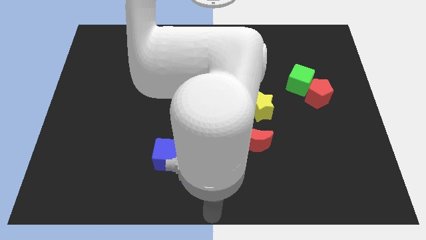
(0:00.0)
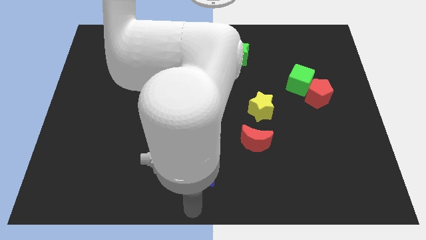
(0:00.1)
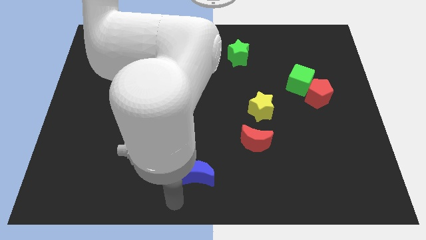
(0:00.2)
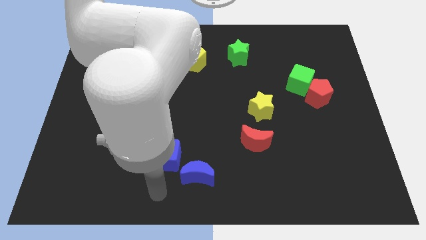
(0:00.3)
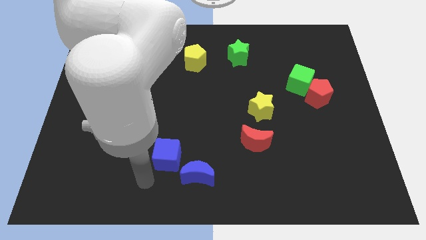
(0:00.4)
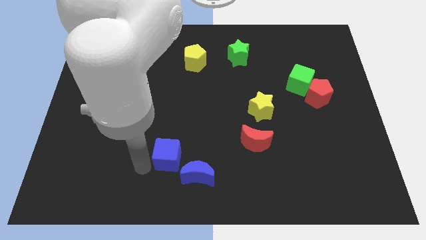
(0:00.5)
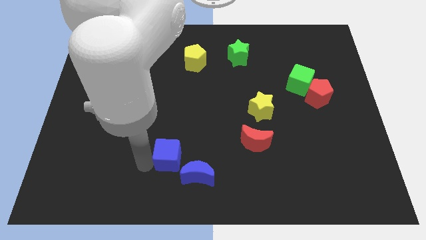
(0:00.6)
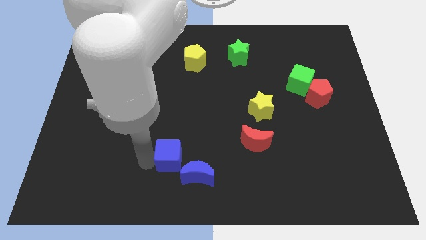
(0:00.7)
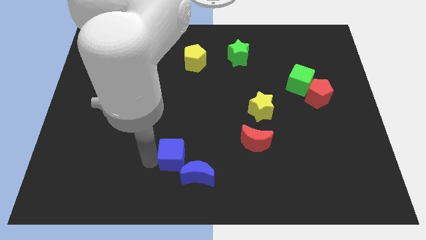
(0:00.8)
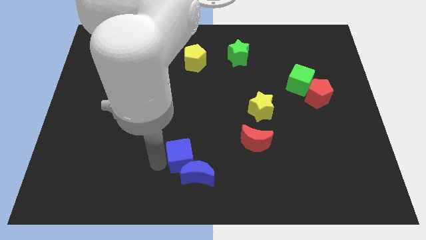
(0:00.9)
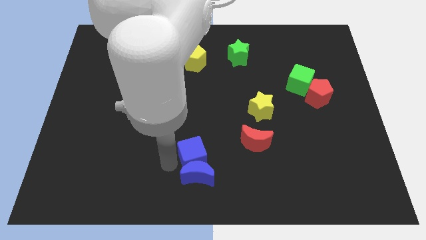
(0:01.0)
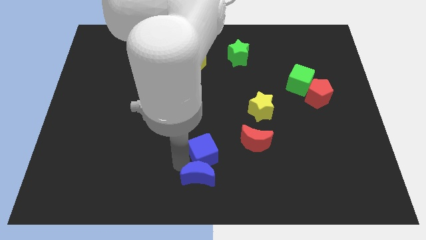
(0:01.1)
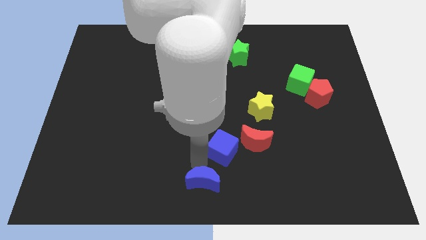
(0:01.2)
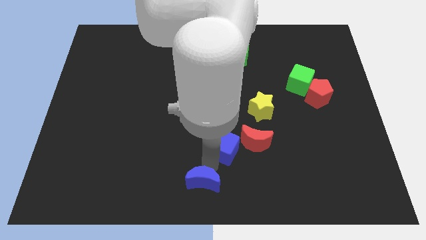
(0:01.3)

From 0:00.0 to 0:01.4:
move the blue cube diagonally top right to the blue moon

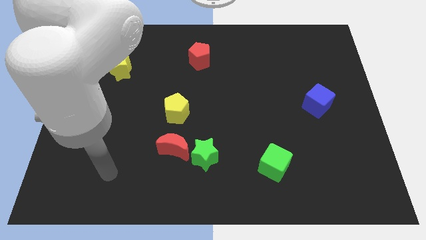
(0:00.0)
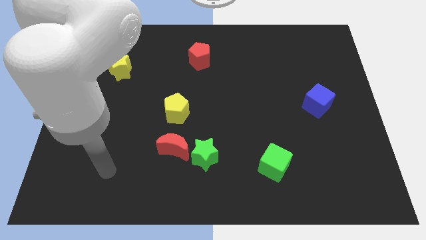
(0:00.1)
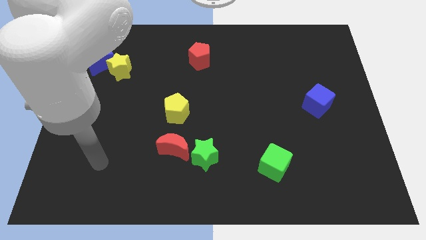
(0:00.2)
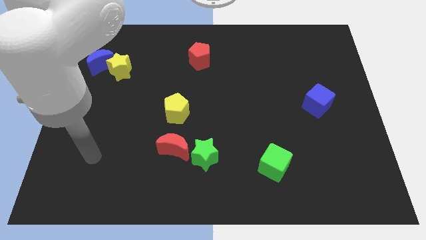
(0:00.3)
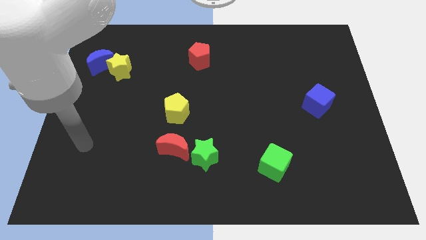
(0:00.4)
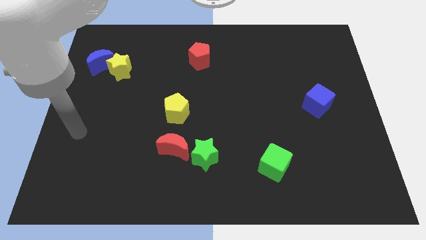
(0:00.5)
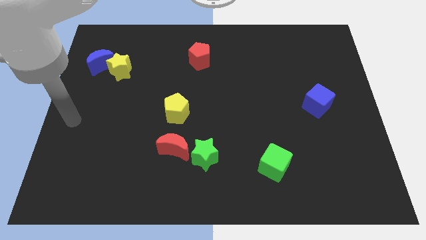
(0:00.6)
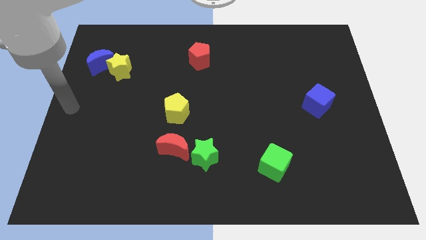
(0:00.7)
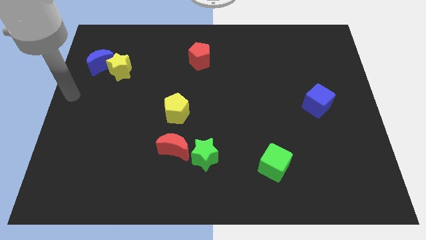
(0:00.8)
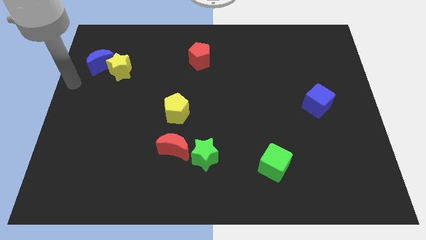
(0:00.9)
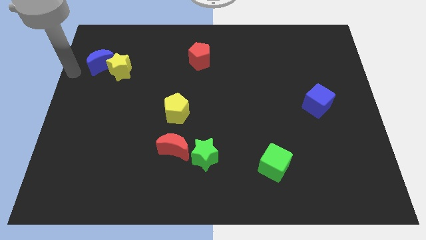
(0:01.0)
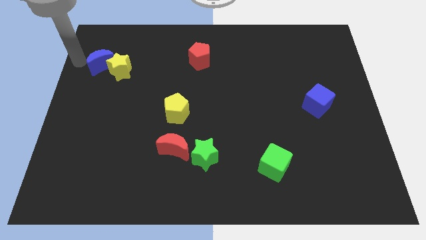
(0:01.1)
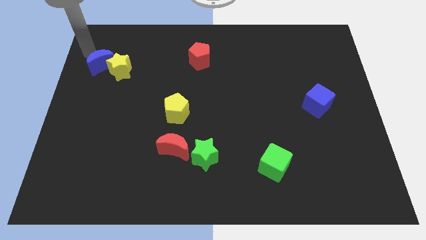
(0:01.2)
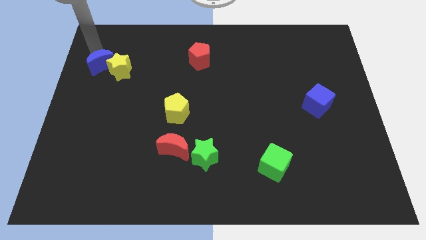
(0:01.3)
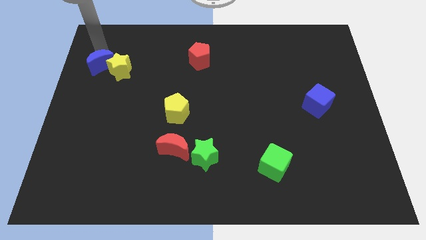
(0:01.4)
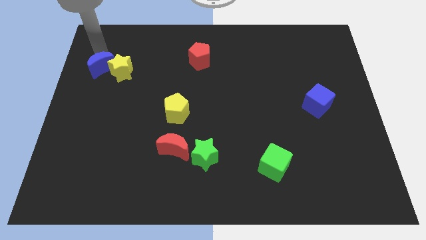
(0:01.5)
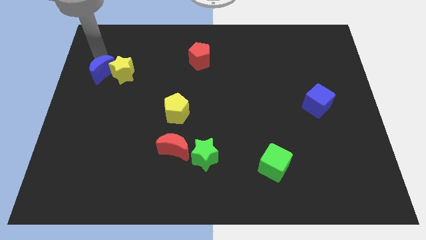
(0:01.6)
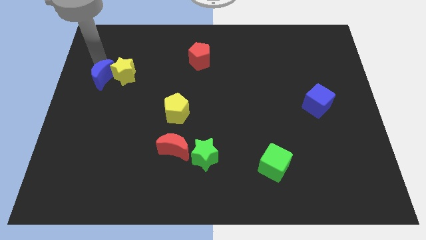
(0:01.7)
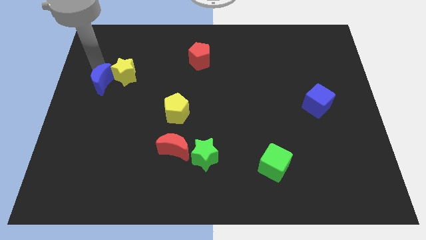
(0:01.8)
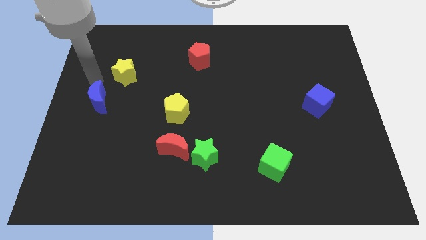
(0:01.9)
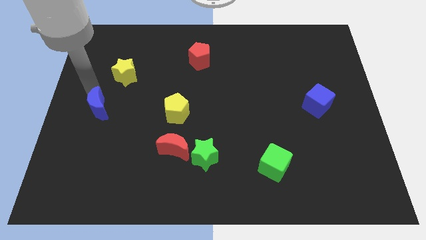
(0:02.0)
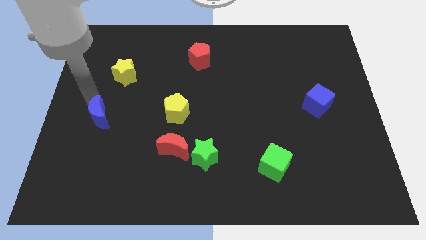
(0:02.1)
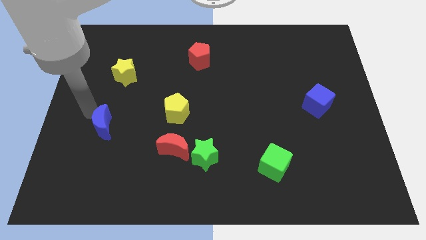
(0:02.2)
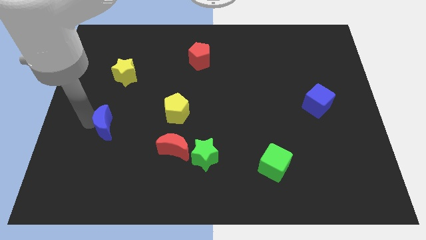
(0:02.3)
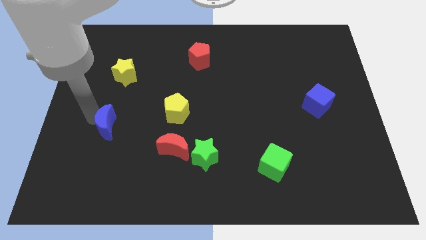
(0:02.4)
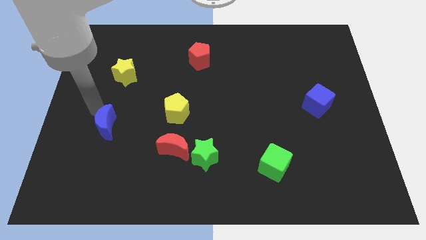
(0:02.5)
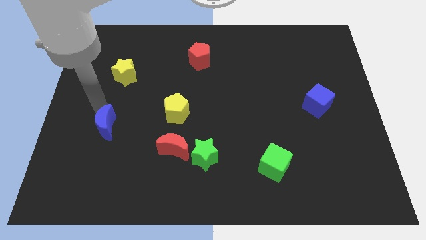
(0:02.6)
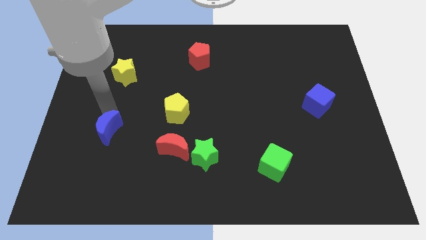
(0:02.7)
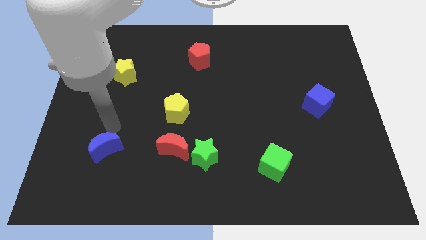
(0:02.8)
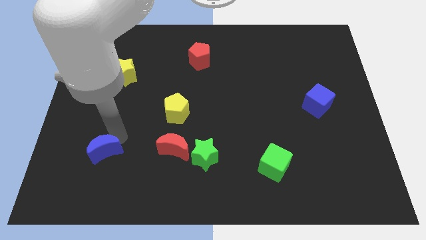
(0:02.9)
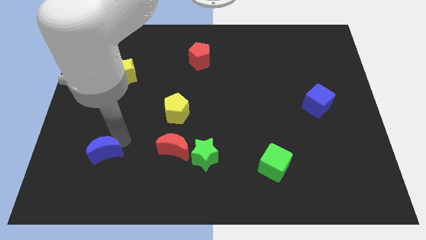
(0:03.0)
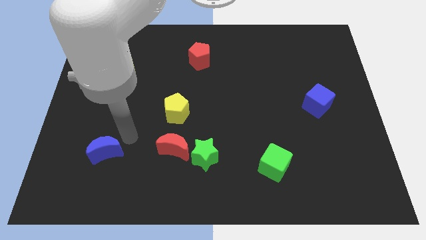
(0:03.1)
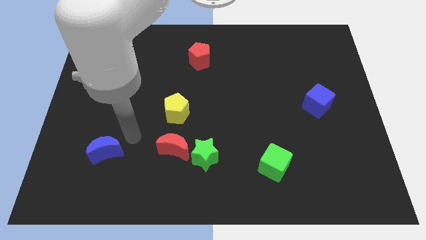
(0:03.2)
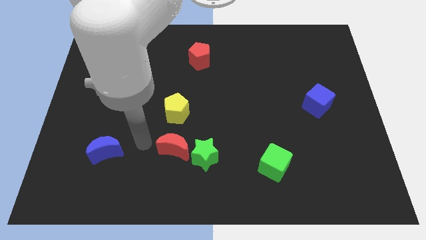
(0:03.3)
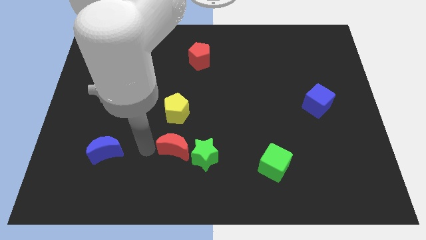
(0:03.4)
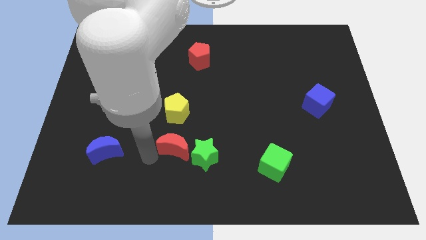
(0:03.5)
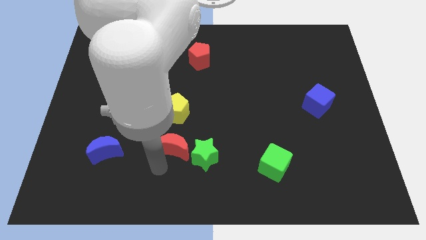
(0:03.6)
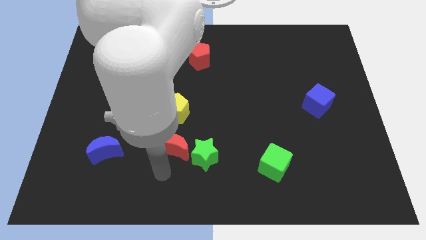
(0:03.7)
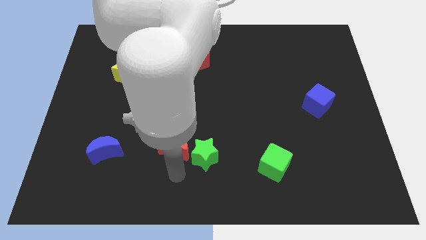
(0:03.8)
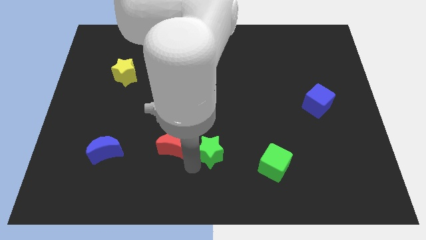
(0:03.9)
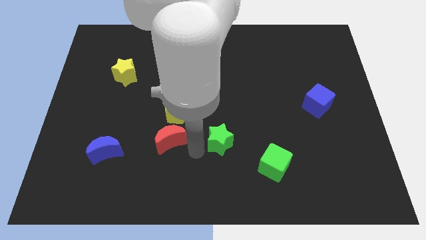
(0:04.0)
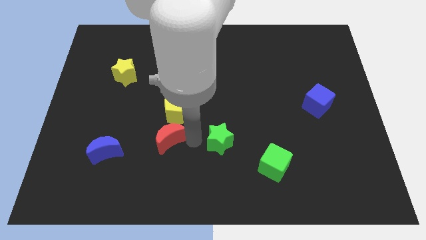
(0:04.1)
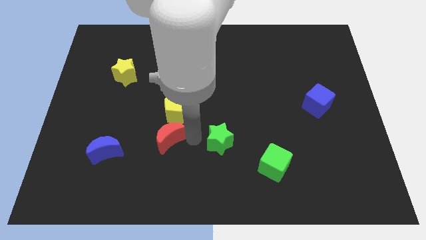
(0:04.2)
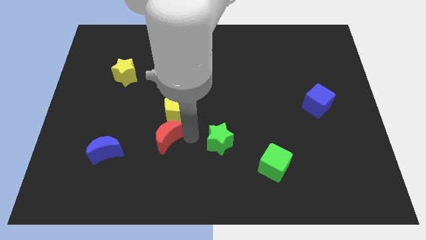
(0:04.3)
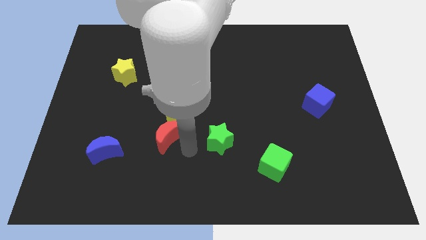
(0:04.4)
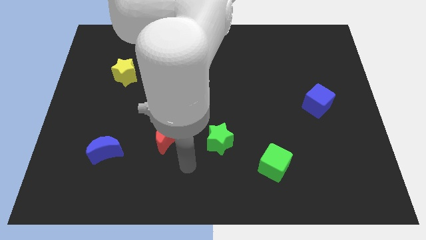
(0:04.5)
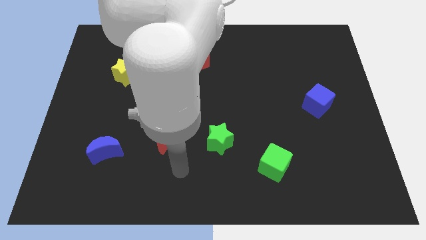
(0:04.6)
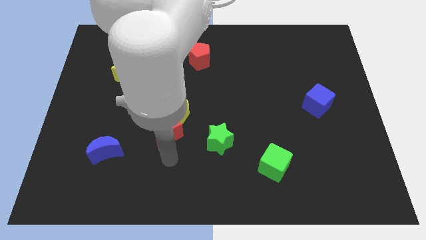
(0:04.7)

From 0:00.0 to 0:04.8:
move the blue crescent towards the bottom left of board

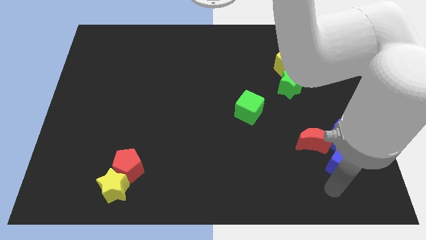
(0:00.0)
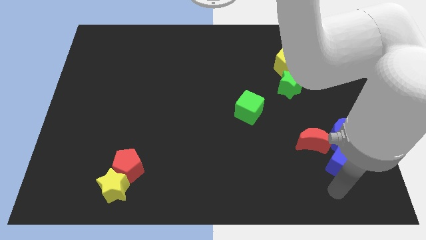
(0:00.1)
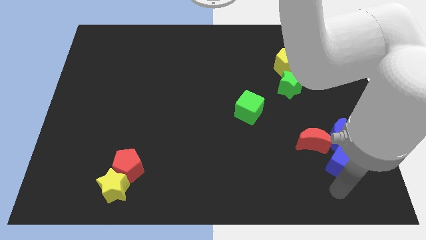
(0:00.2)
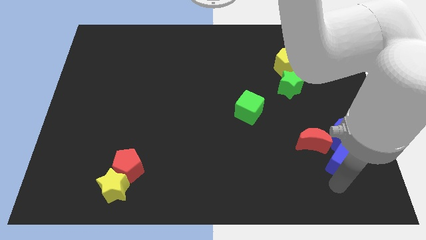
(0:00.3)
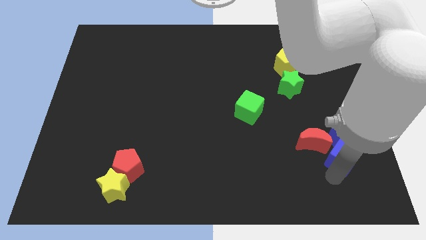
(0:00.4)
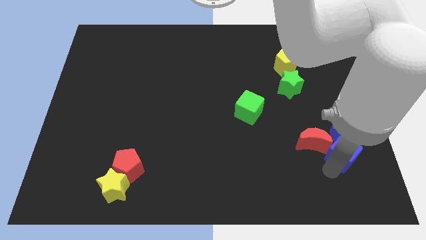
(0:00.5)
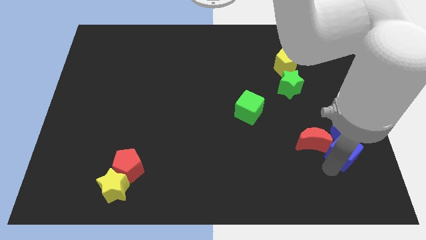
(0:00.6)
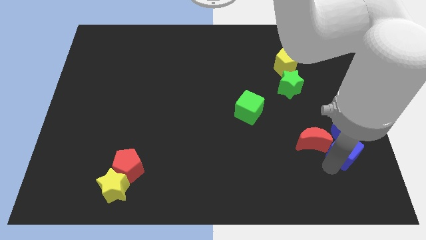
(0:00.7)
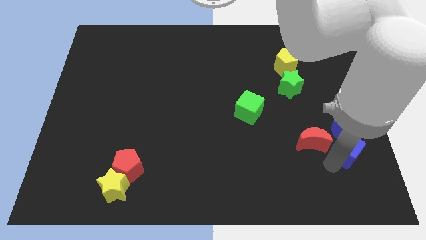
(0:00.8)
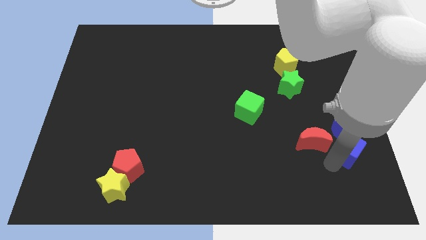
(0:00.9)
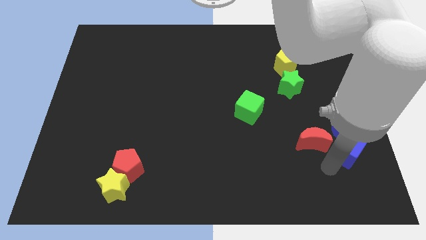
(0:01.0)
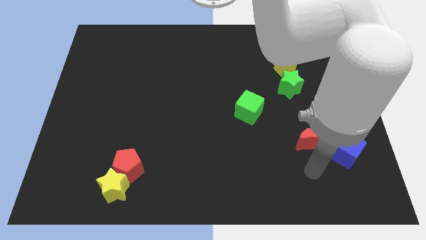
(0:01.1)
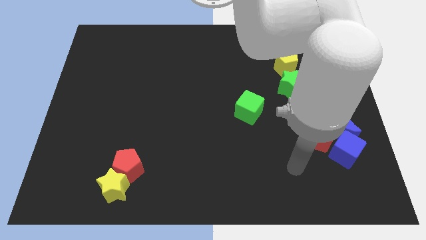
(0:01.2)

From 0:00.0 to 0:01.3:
push the blue cube into the blue crescent

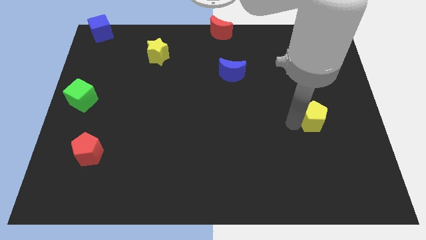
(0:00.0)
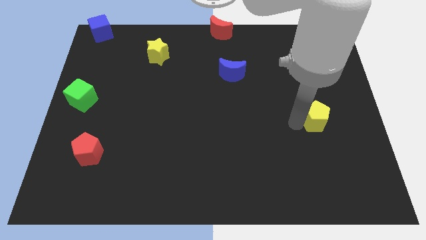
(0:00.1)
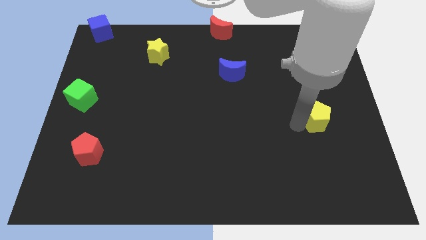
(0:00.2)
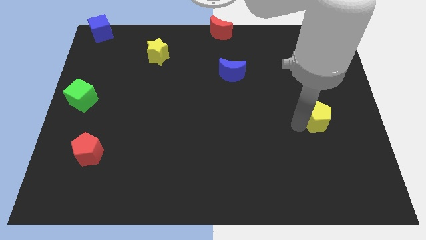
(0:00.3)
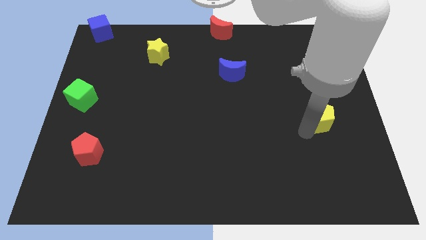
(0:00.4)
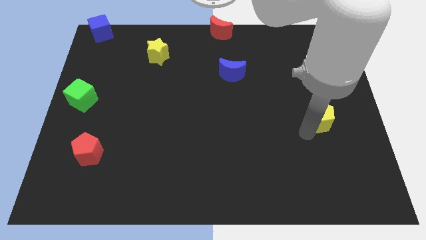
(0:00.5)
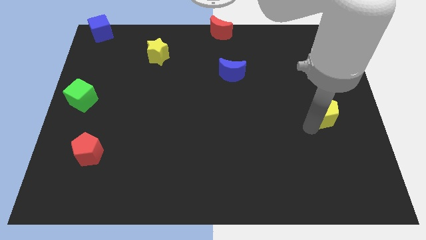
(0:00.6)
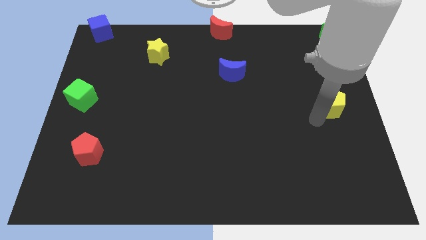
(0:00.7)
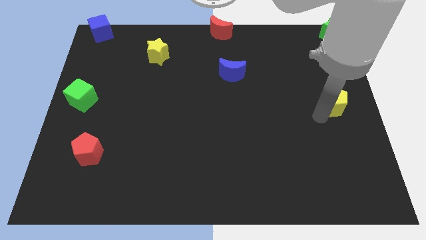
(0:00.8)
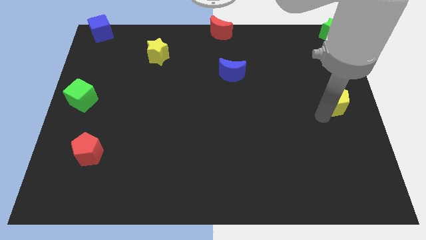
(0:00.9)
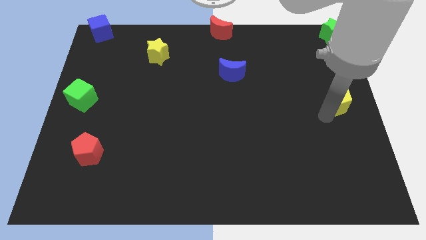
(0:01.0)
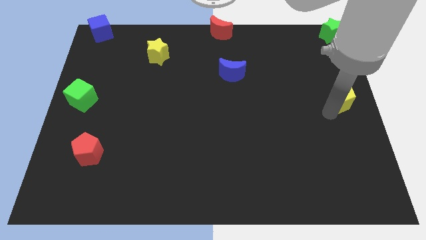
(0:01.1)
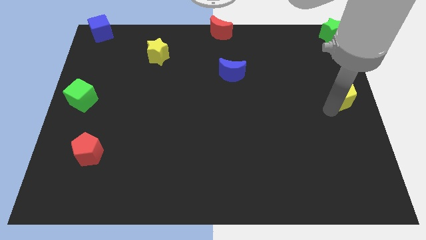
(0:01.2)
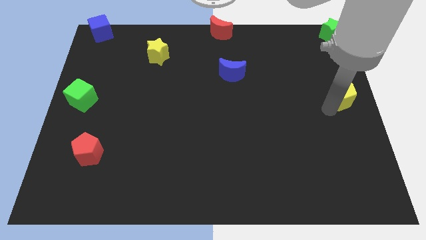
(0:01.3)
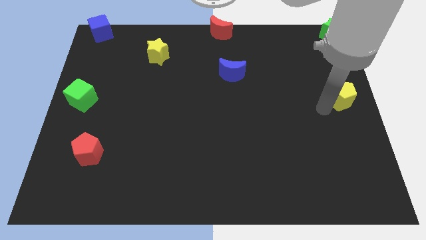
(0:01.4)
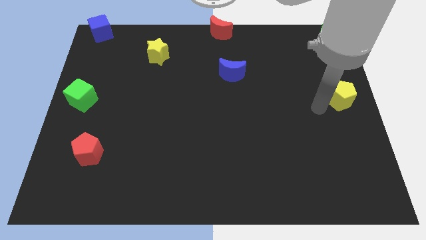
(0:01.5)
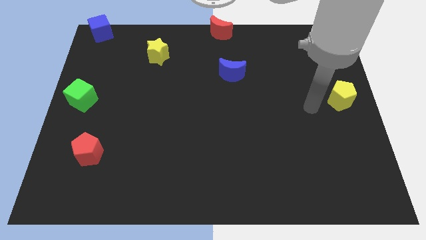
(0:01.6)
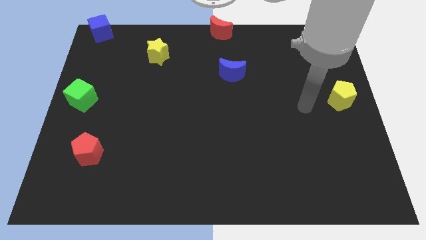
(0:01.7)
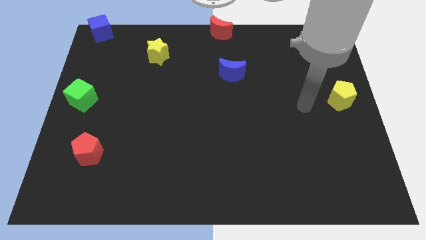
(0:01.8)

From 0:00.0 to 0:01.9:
place the yellow pentagon to the right centre of the board
